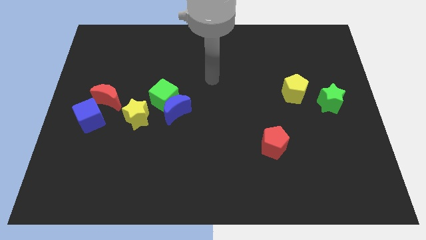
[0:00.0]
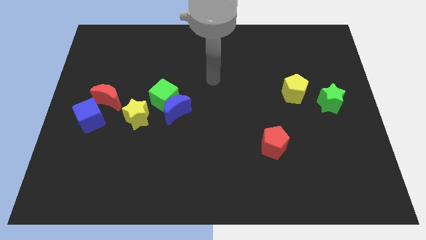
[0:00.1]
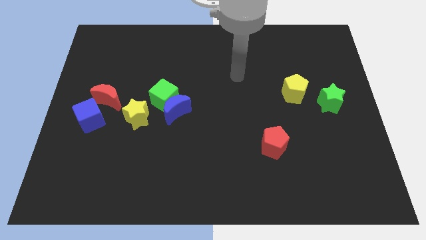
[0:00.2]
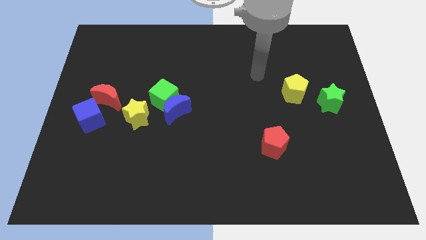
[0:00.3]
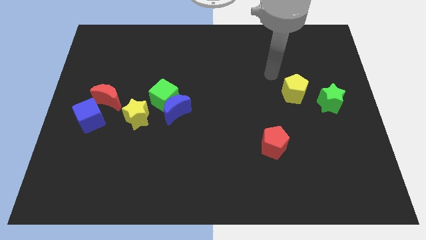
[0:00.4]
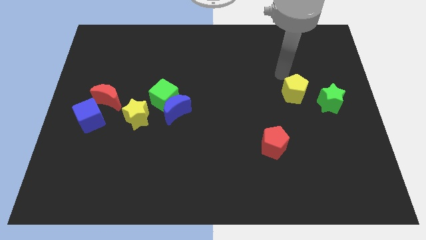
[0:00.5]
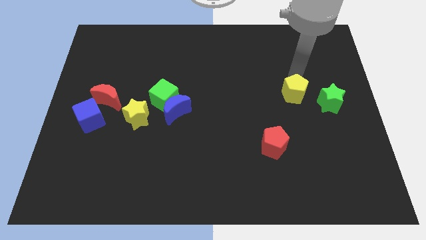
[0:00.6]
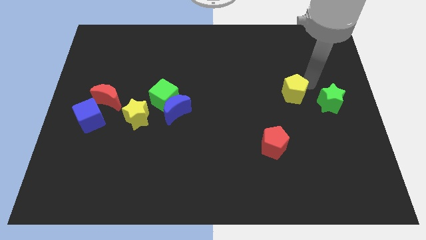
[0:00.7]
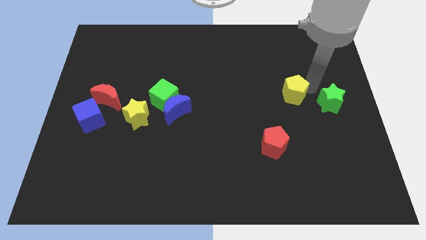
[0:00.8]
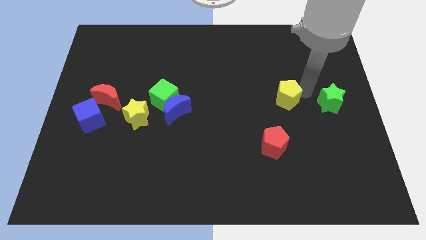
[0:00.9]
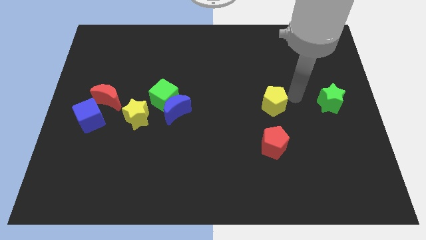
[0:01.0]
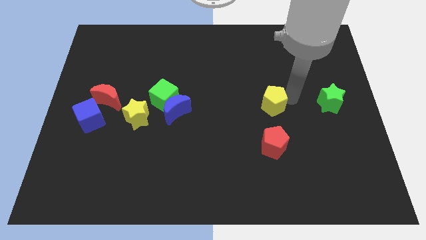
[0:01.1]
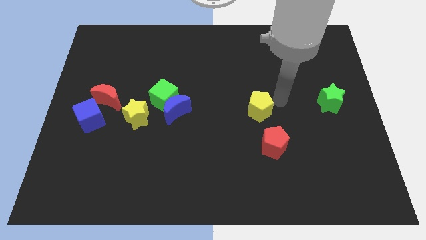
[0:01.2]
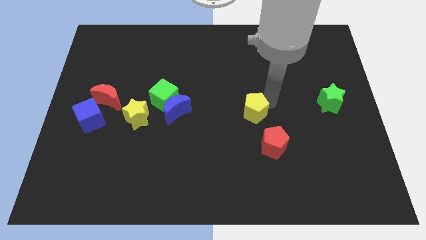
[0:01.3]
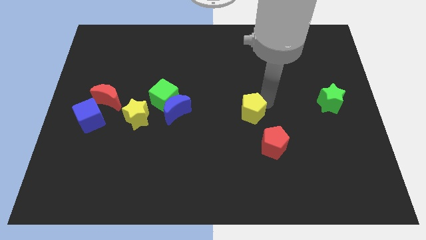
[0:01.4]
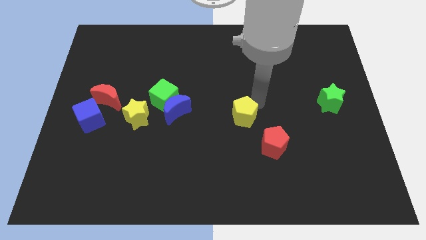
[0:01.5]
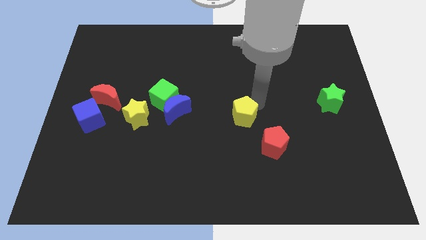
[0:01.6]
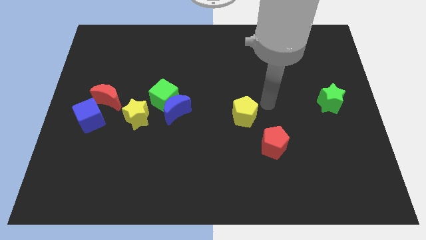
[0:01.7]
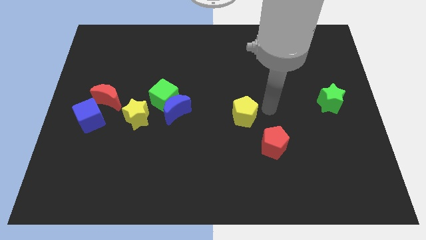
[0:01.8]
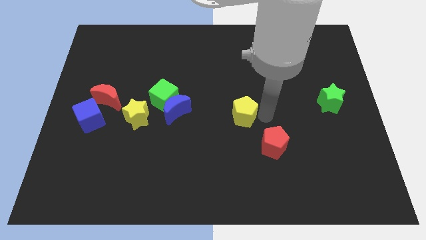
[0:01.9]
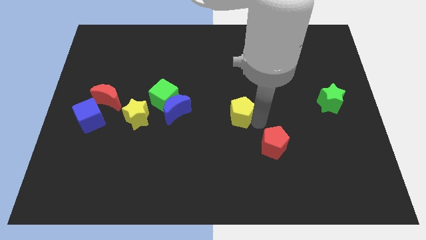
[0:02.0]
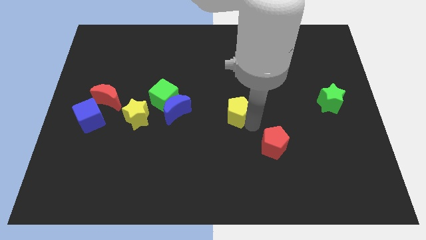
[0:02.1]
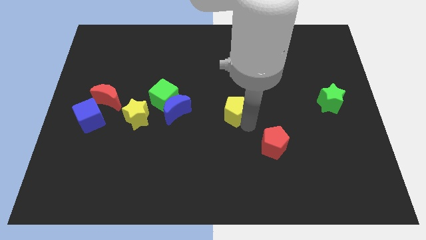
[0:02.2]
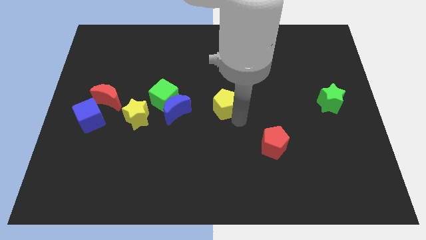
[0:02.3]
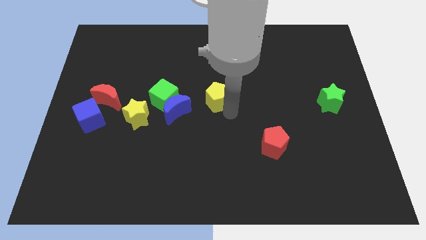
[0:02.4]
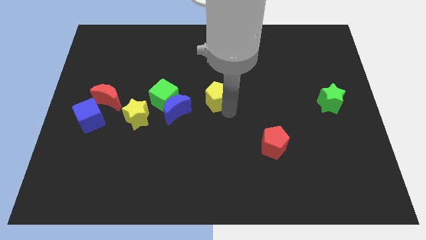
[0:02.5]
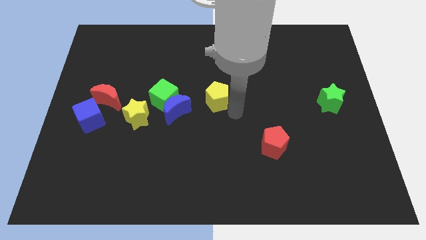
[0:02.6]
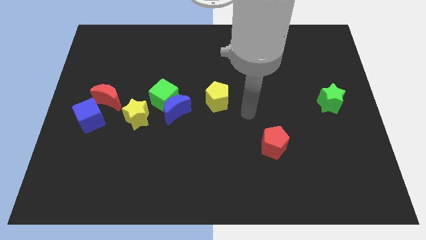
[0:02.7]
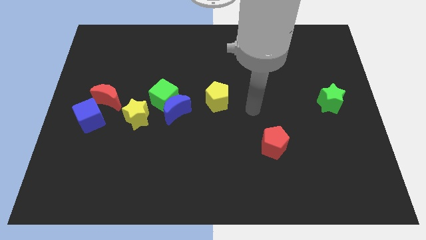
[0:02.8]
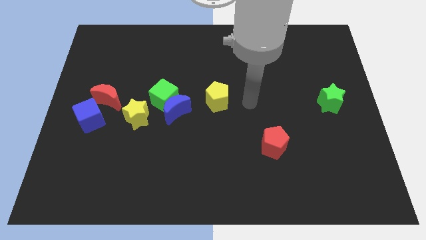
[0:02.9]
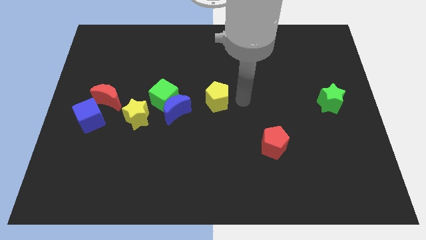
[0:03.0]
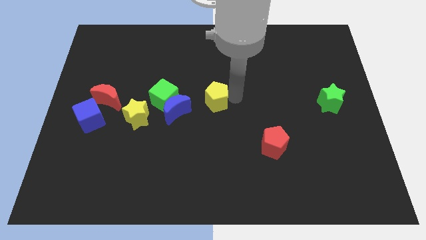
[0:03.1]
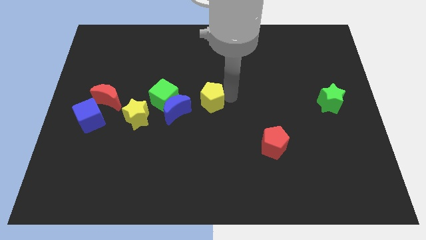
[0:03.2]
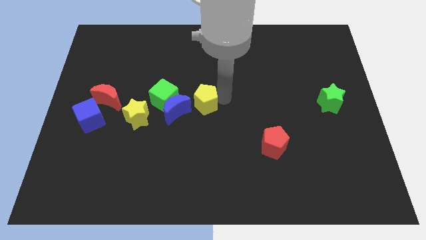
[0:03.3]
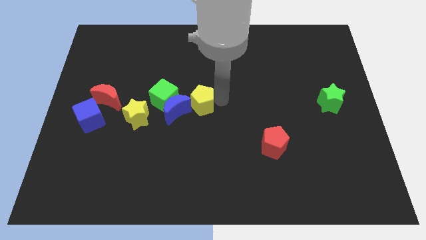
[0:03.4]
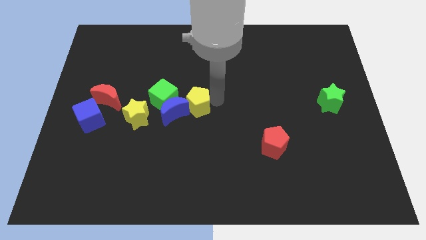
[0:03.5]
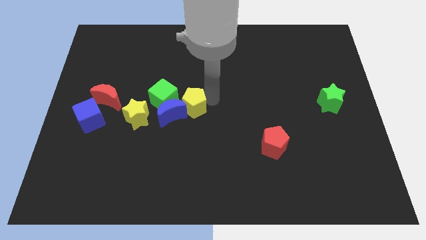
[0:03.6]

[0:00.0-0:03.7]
put the yellow pentagon next to the blue moon

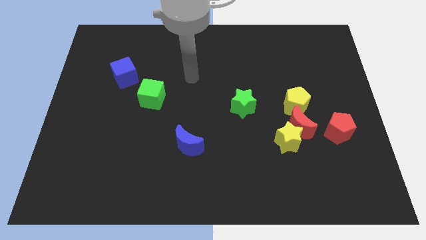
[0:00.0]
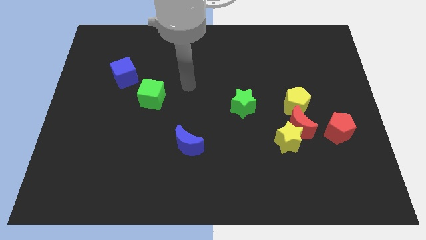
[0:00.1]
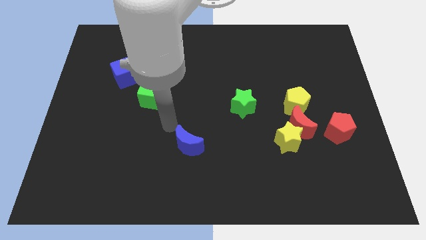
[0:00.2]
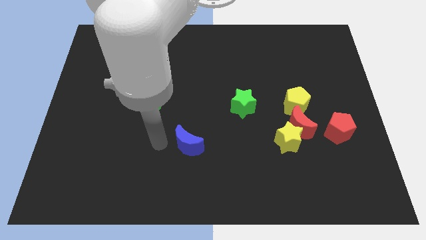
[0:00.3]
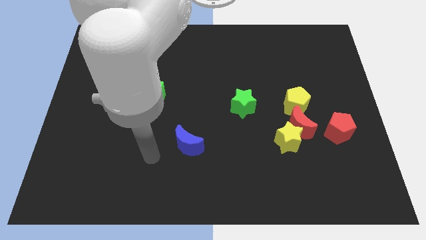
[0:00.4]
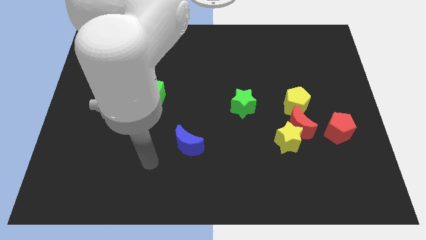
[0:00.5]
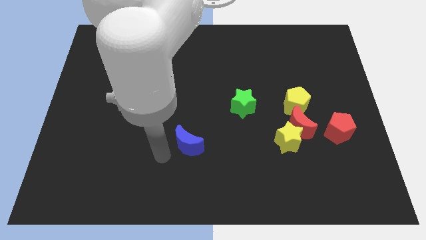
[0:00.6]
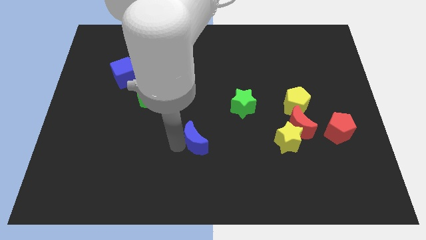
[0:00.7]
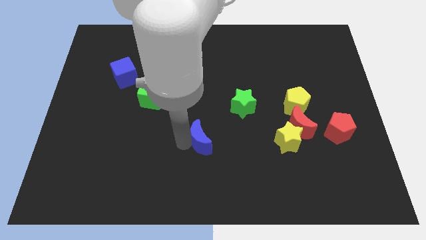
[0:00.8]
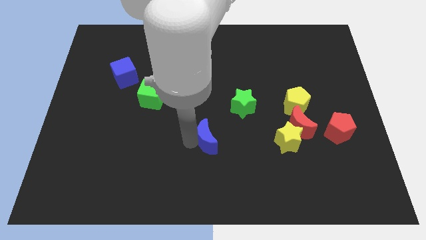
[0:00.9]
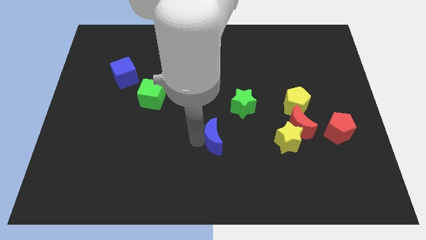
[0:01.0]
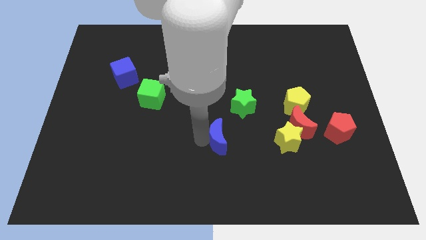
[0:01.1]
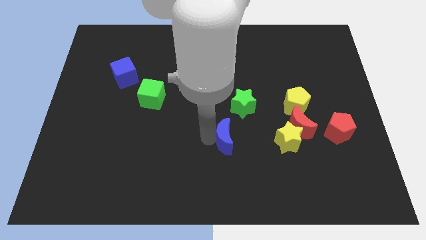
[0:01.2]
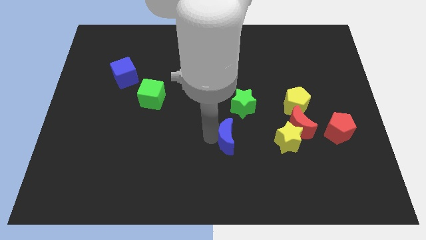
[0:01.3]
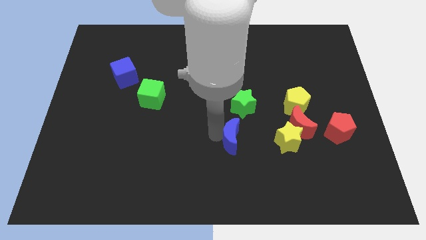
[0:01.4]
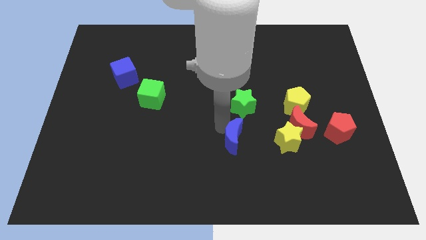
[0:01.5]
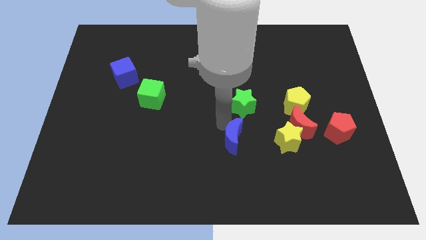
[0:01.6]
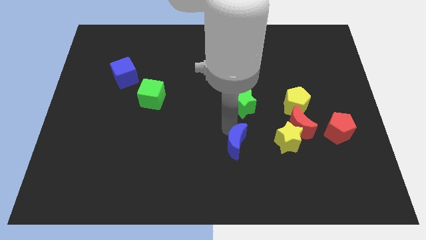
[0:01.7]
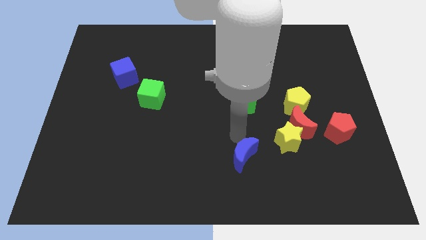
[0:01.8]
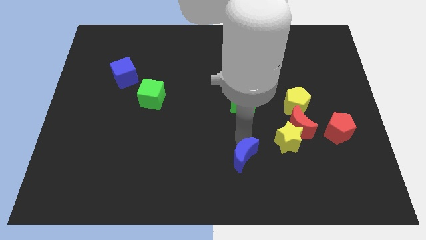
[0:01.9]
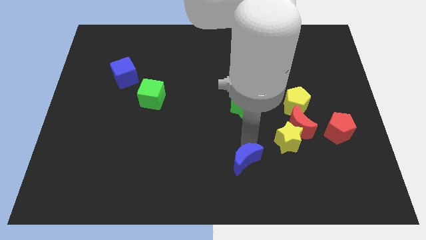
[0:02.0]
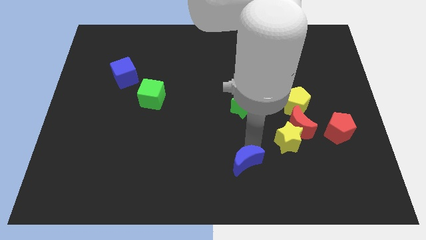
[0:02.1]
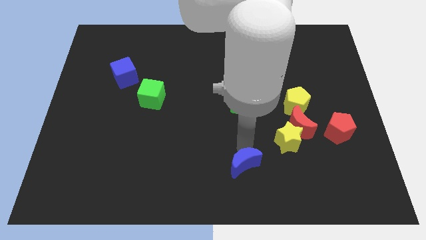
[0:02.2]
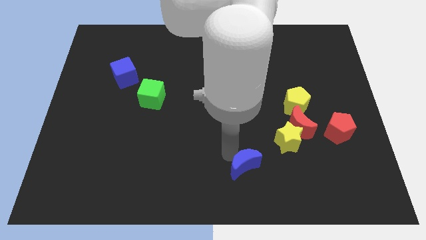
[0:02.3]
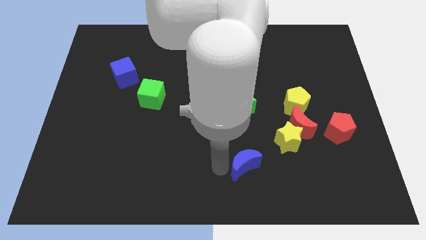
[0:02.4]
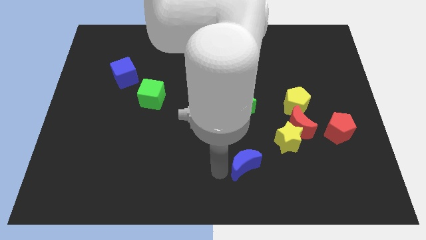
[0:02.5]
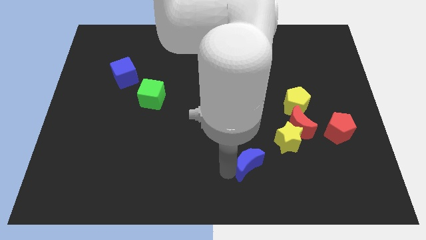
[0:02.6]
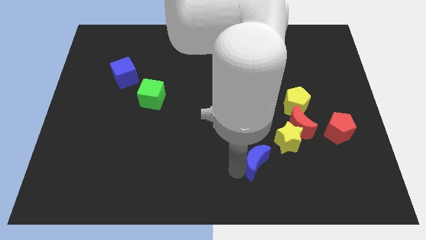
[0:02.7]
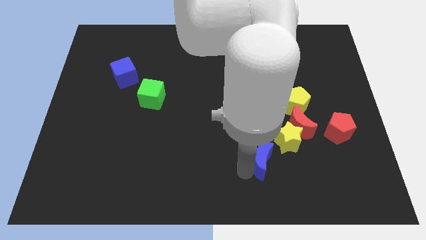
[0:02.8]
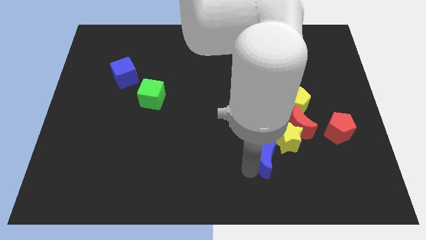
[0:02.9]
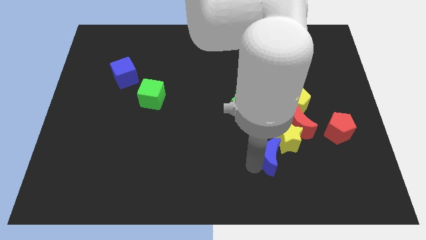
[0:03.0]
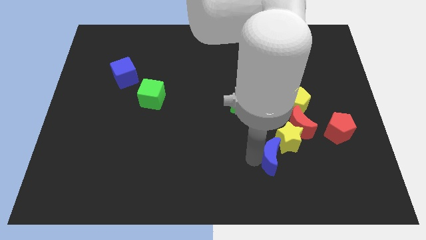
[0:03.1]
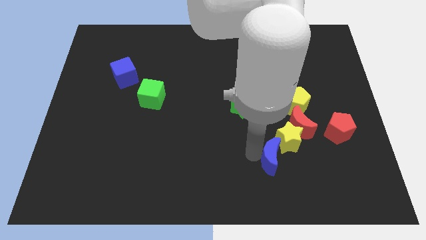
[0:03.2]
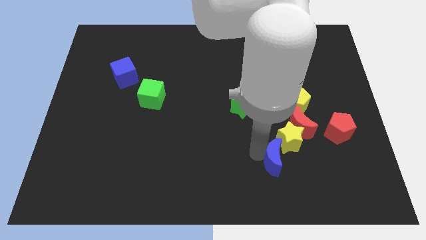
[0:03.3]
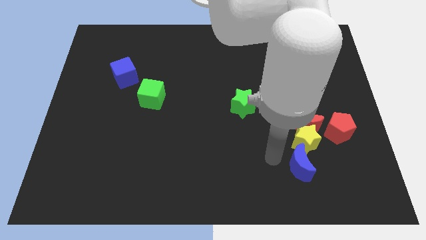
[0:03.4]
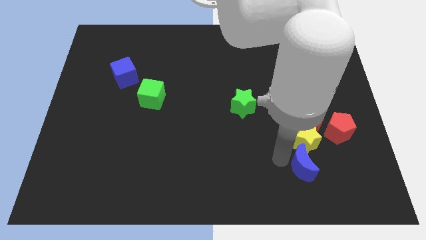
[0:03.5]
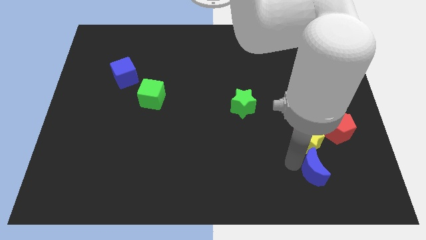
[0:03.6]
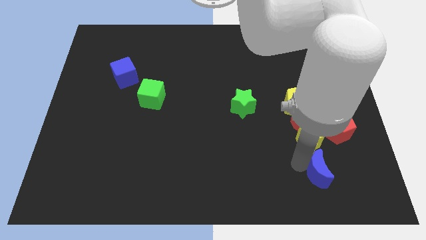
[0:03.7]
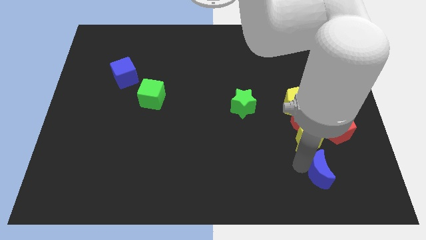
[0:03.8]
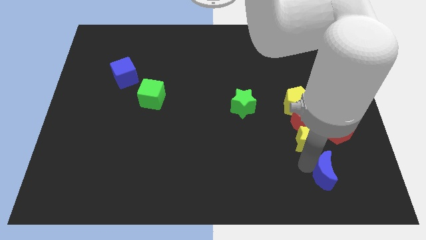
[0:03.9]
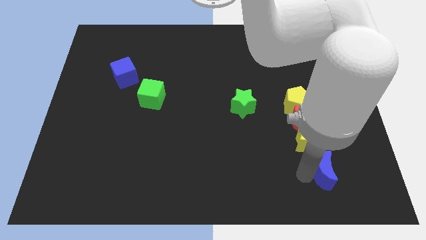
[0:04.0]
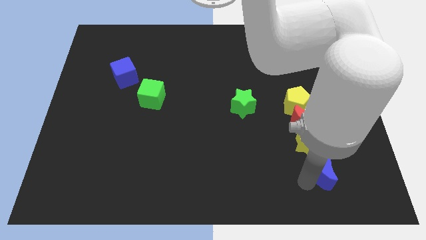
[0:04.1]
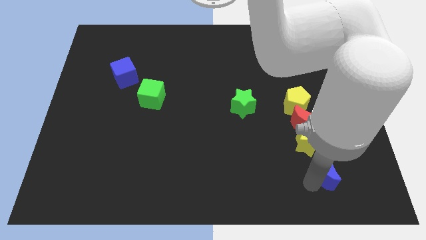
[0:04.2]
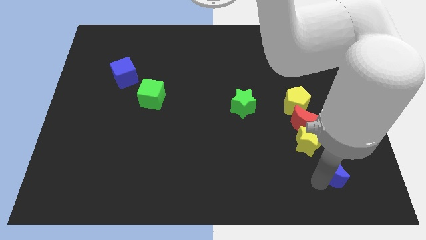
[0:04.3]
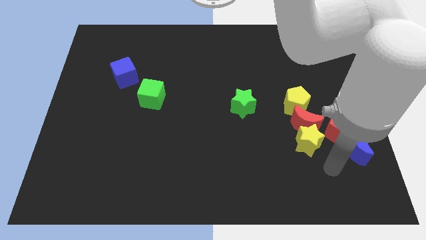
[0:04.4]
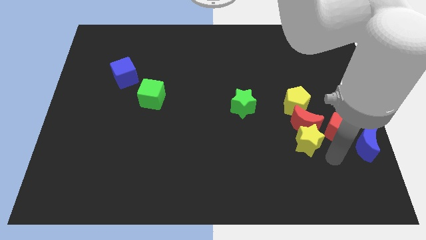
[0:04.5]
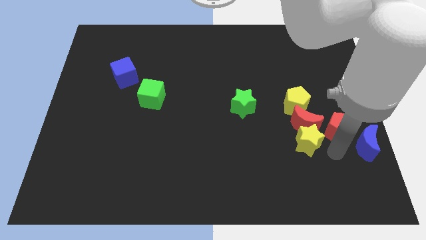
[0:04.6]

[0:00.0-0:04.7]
put the blue moon next to the red pentagon
